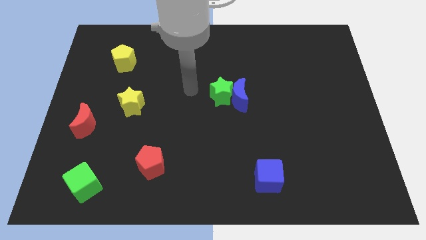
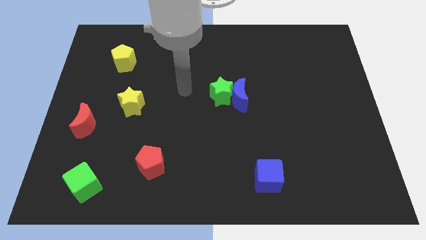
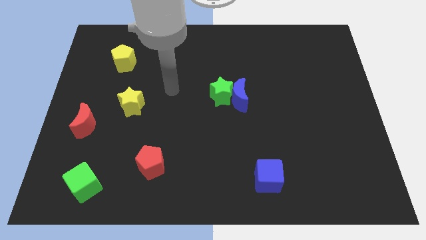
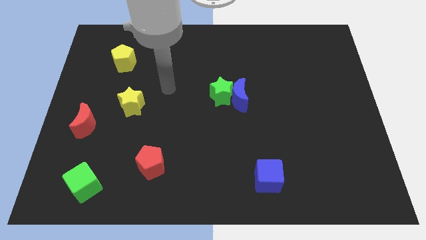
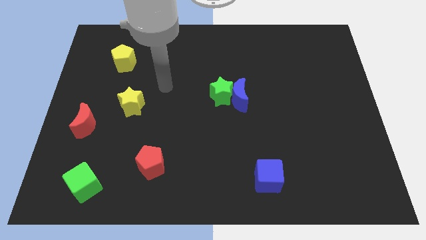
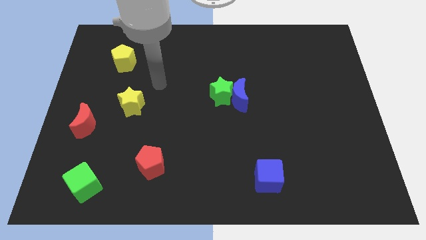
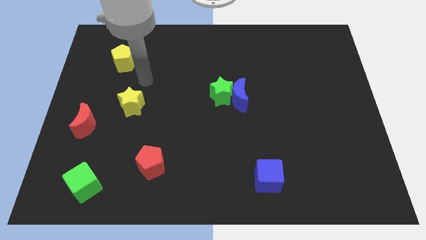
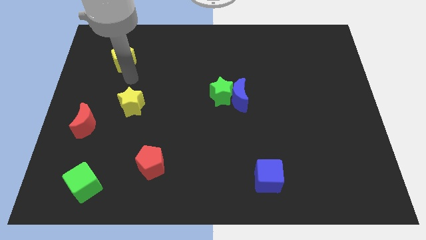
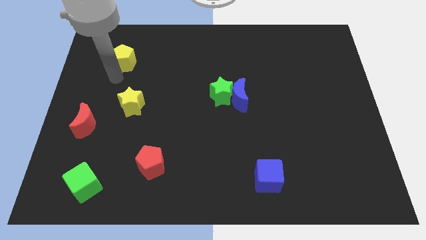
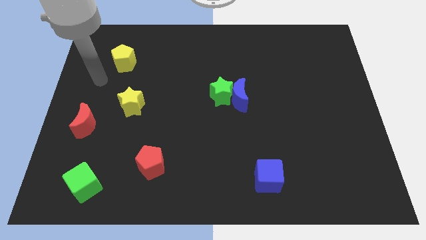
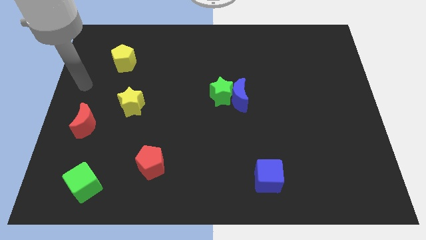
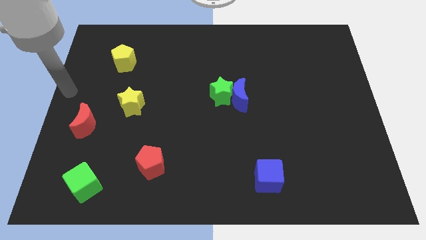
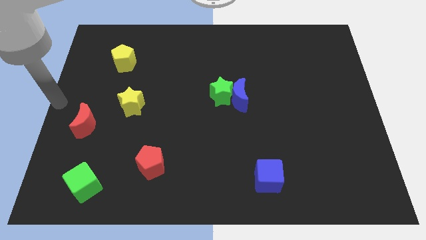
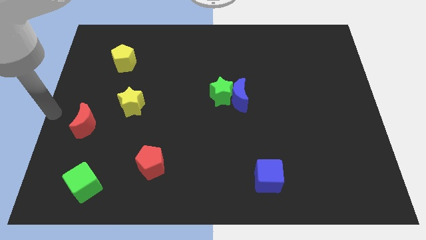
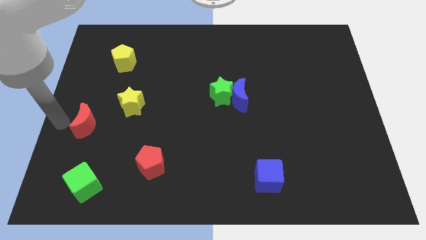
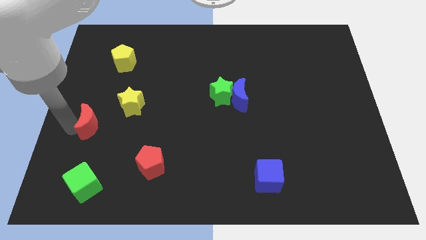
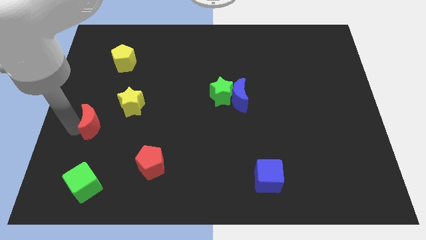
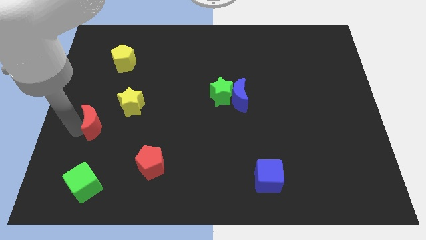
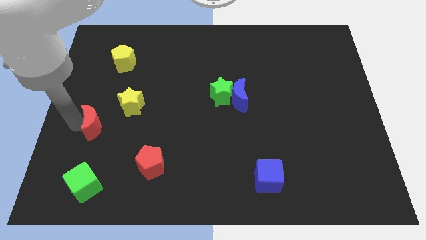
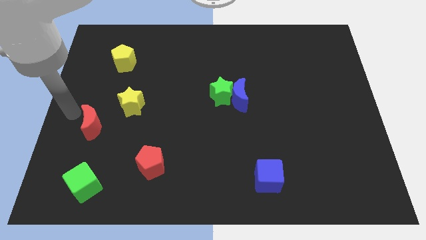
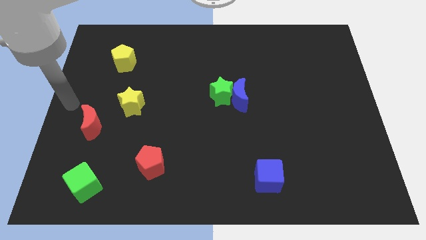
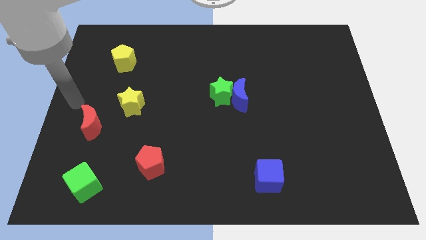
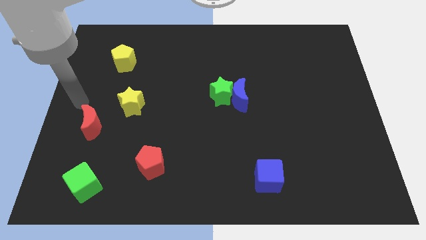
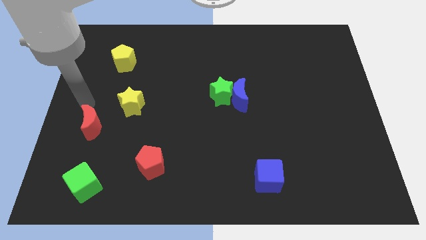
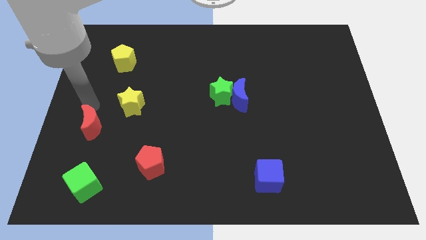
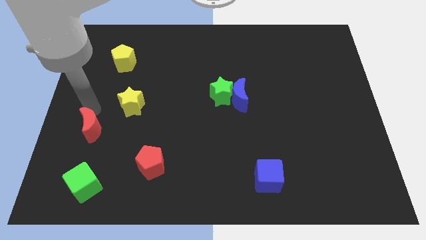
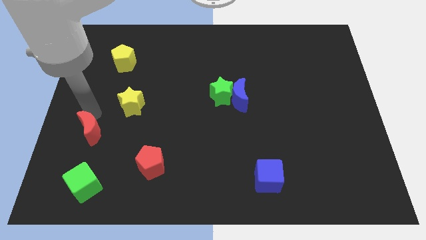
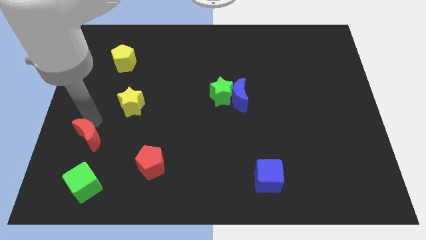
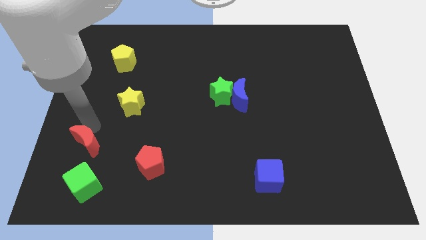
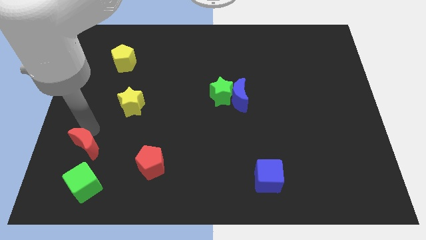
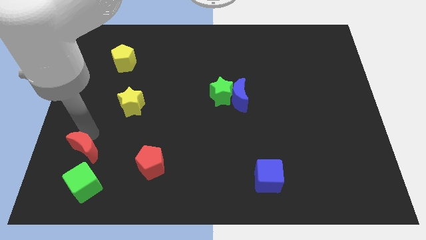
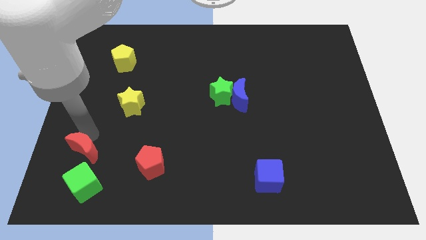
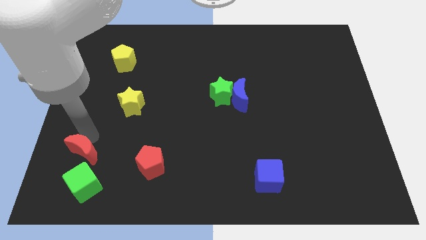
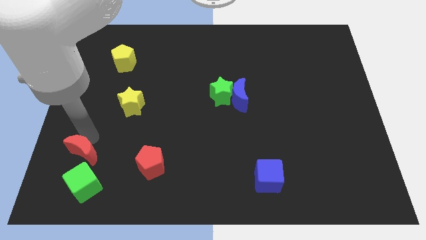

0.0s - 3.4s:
push the red crescent to the top of the green cube

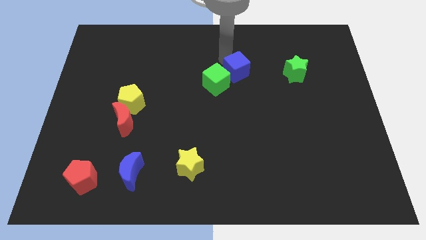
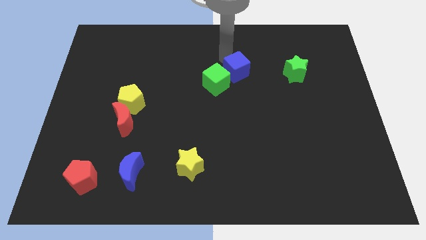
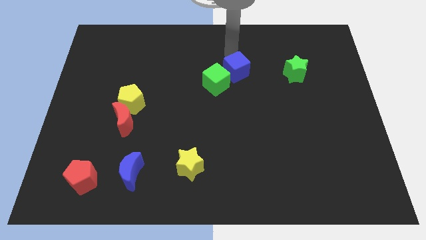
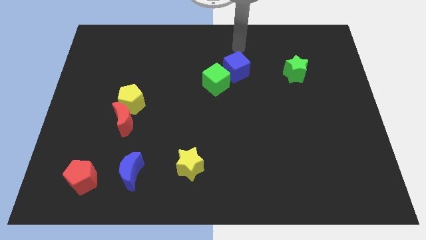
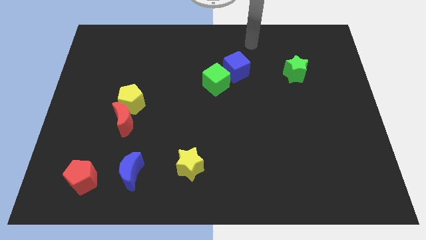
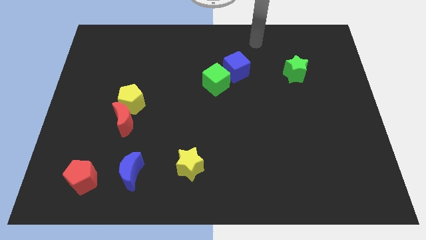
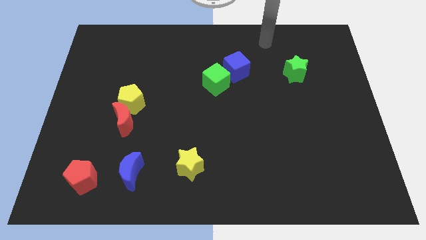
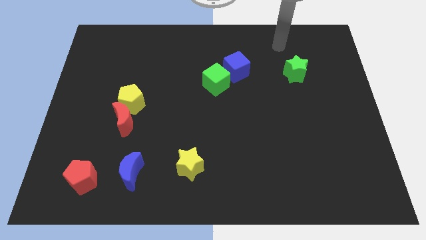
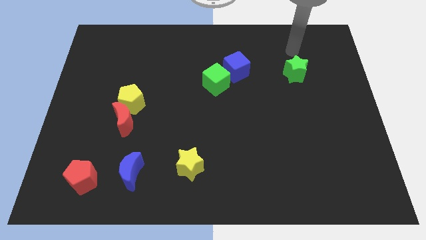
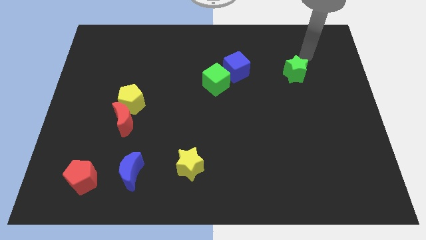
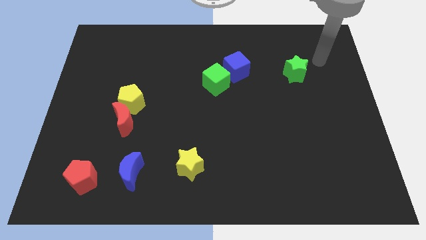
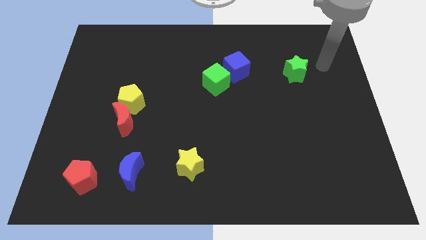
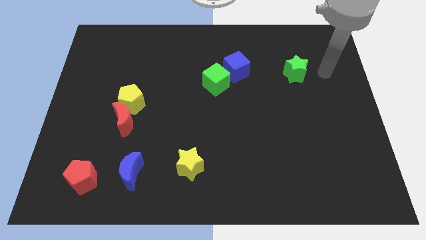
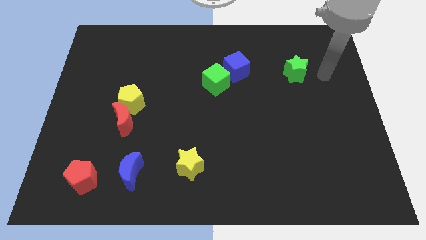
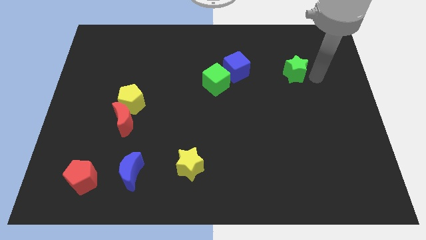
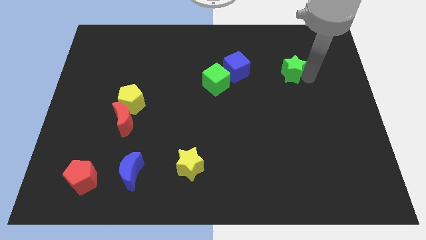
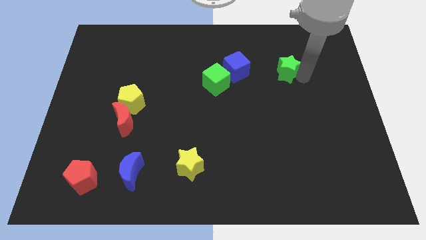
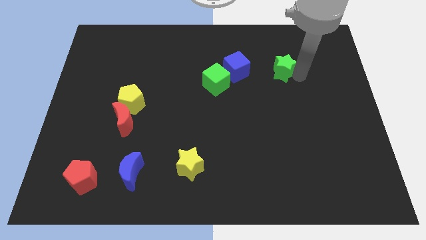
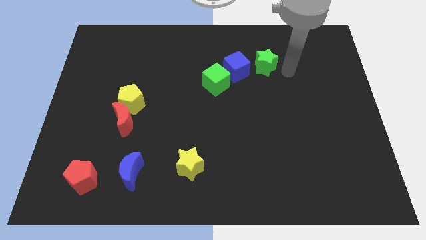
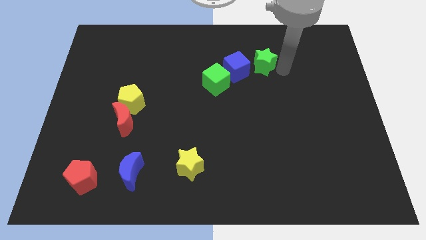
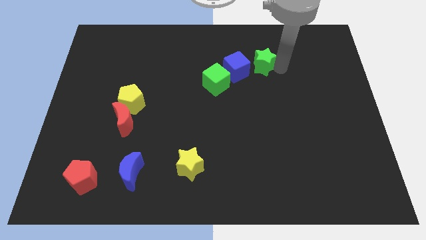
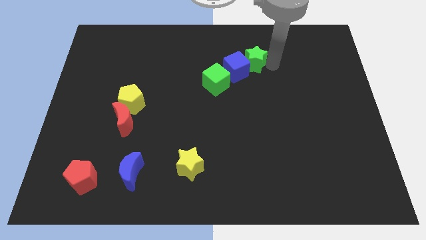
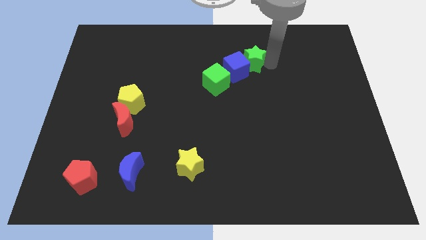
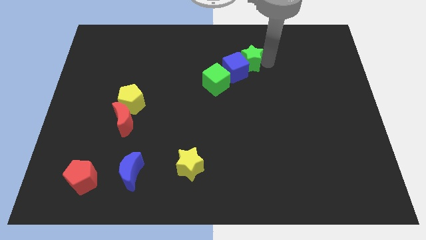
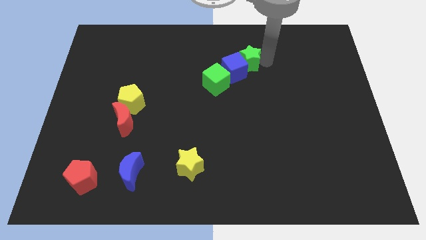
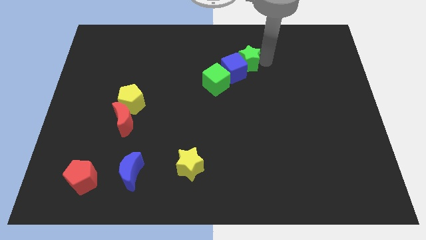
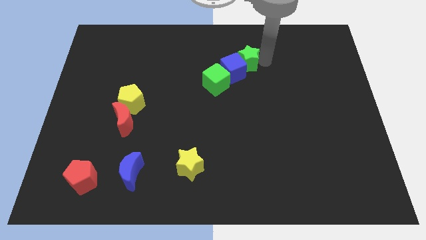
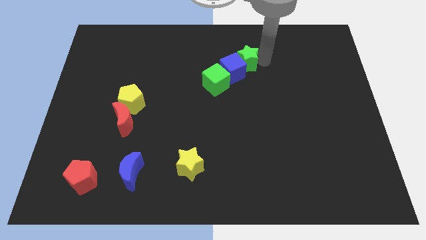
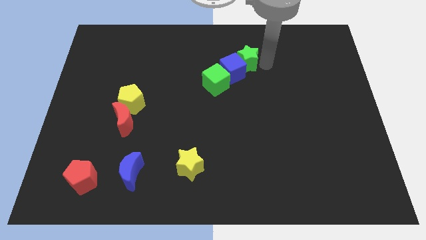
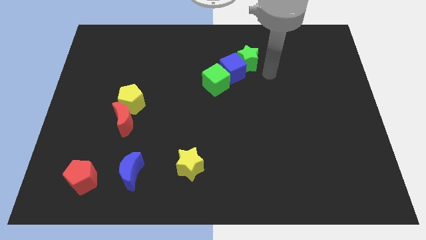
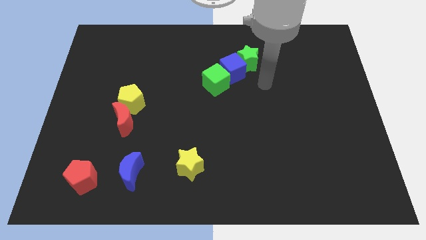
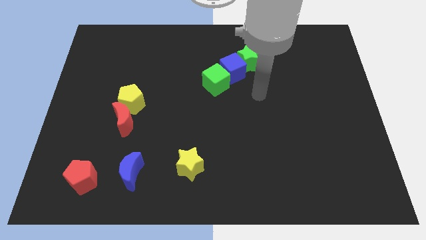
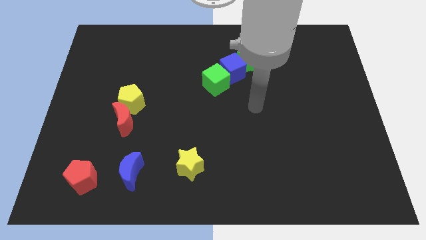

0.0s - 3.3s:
push the green star diagonally top right to the blue cube

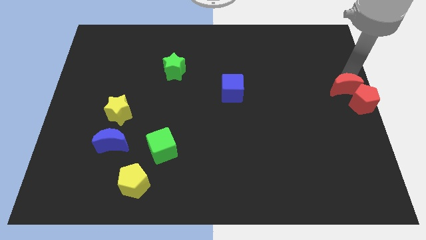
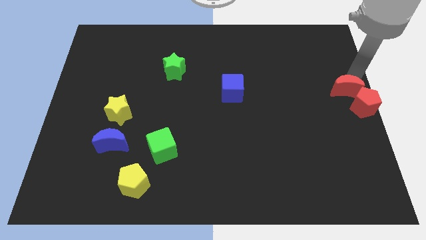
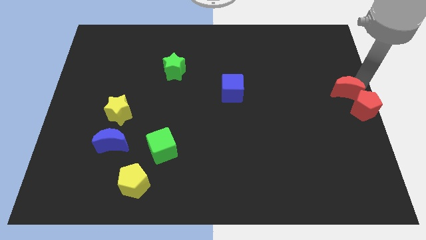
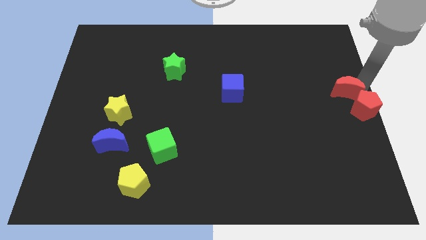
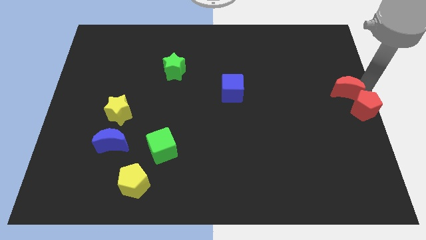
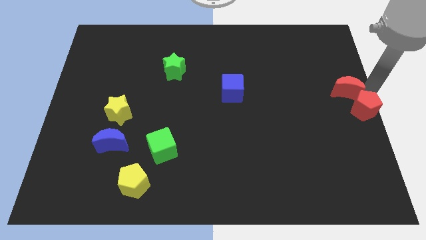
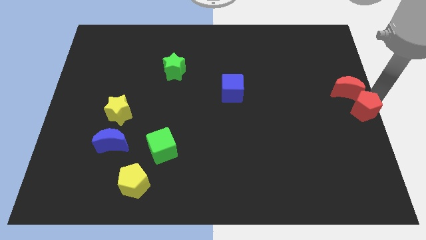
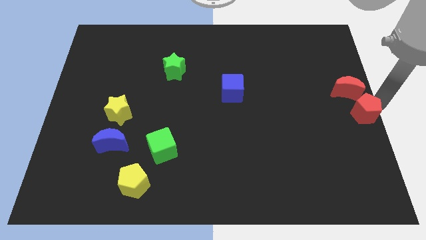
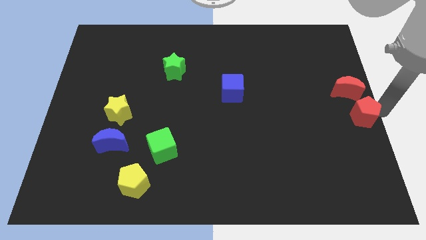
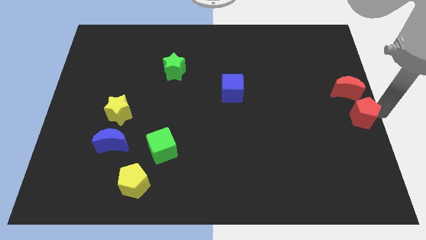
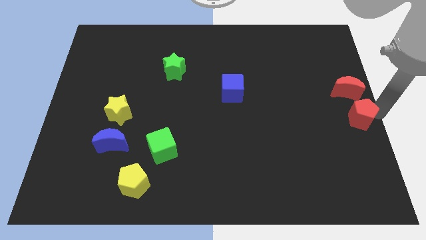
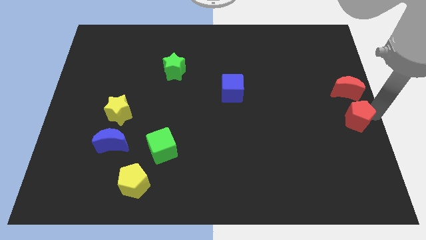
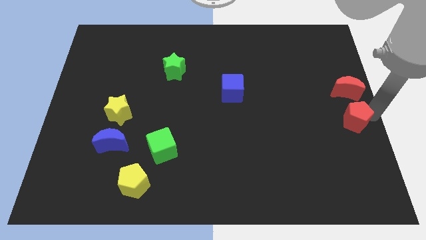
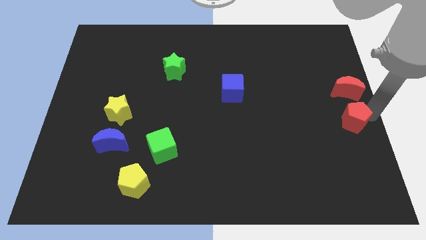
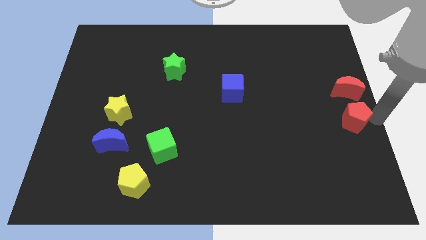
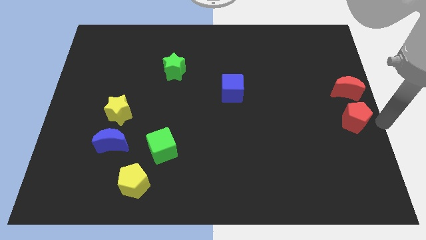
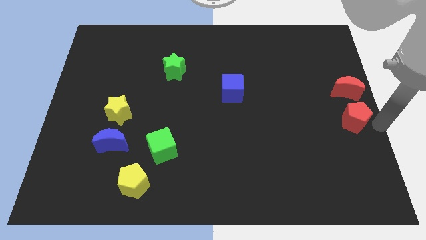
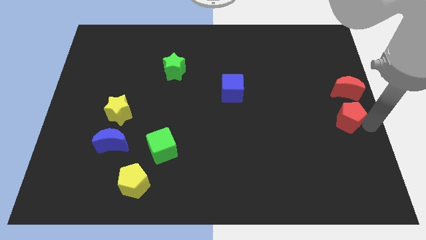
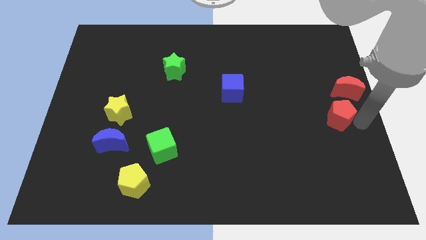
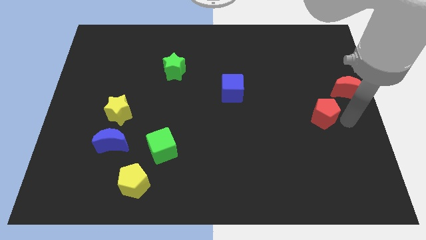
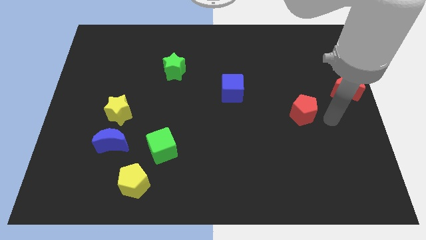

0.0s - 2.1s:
separate red pentagon from red moon
